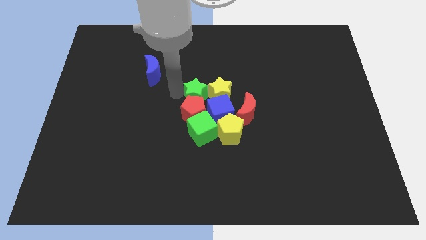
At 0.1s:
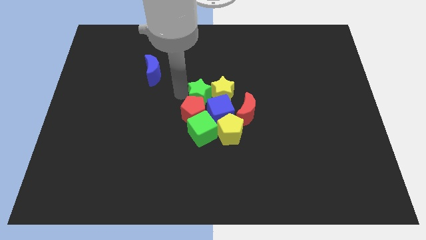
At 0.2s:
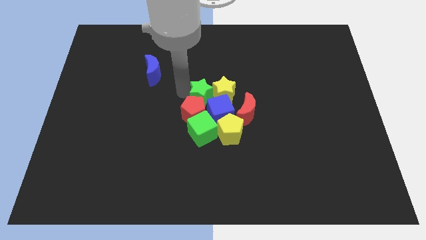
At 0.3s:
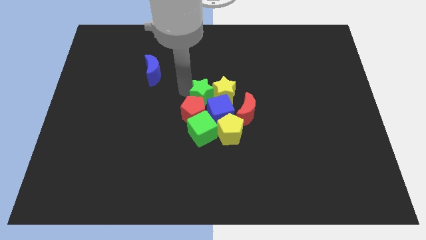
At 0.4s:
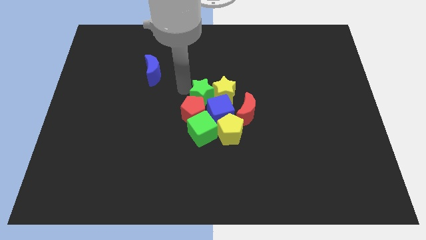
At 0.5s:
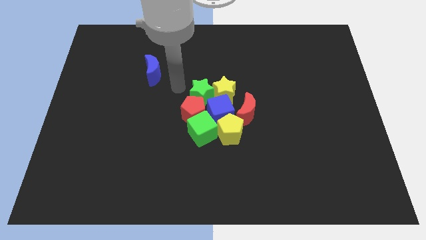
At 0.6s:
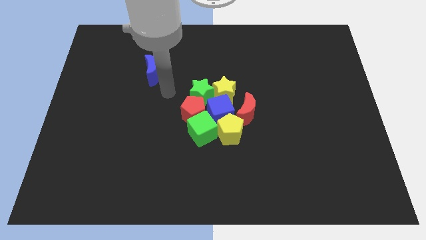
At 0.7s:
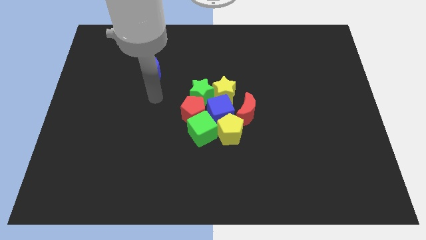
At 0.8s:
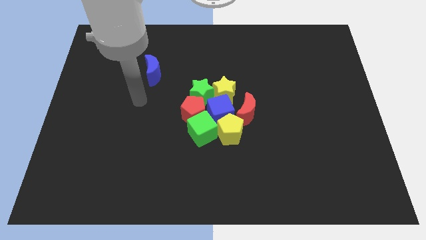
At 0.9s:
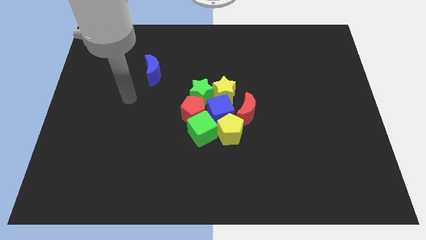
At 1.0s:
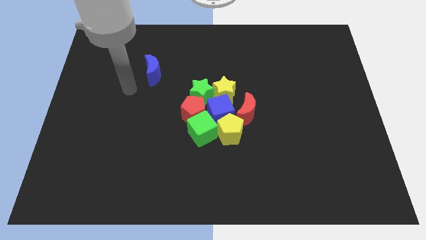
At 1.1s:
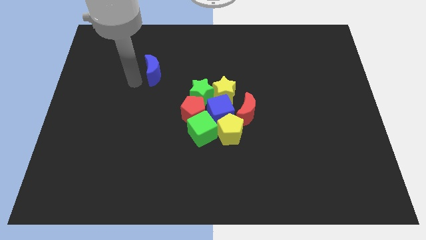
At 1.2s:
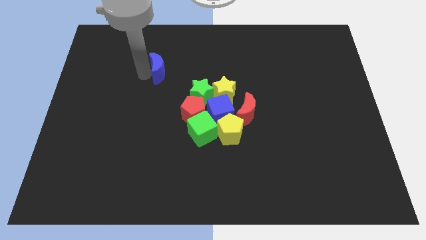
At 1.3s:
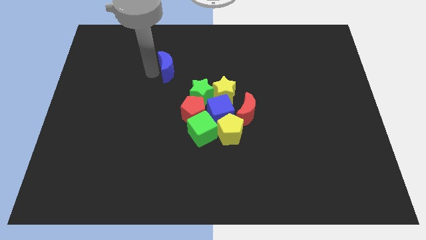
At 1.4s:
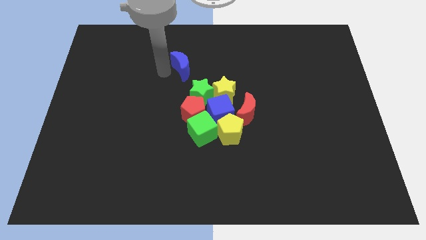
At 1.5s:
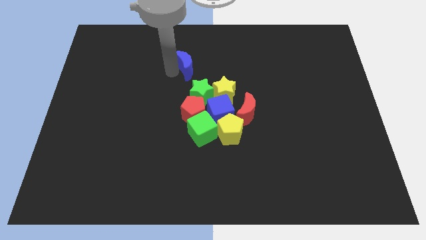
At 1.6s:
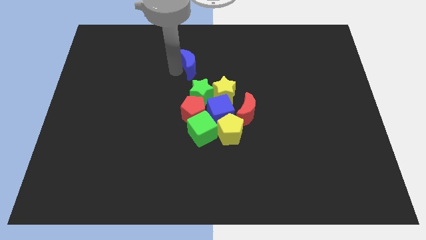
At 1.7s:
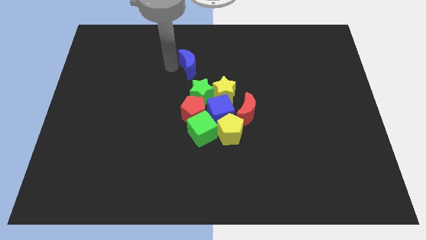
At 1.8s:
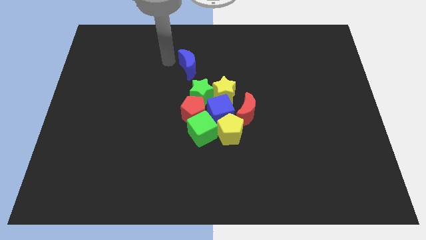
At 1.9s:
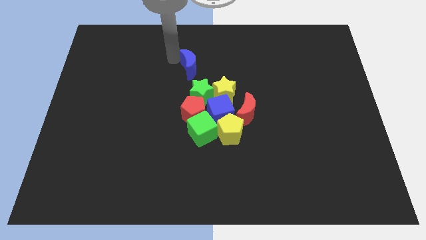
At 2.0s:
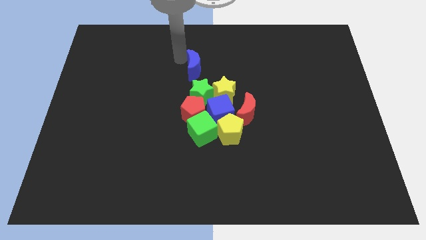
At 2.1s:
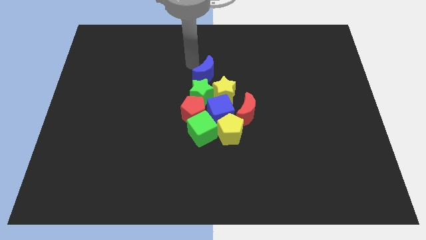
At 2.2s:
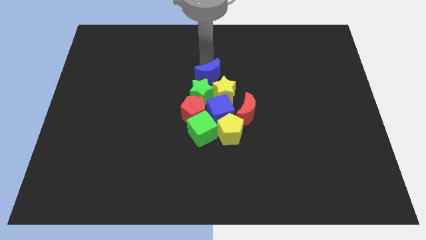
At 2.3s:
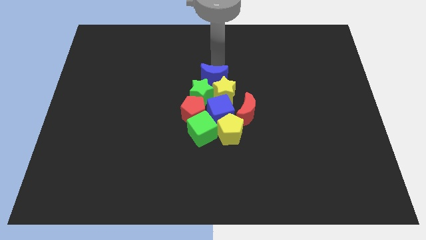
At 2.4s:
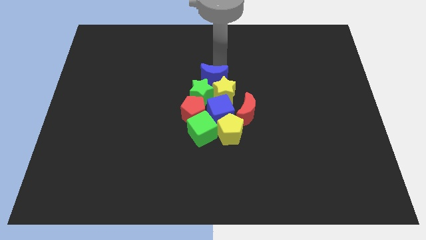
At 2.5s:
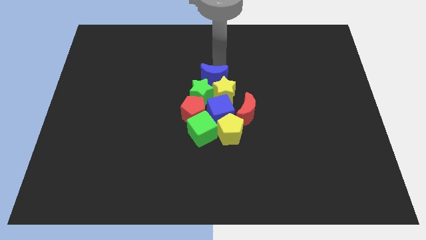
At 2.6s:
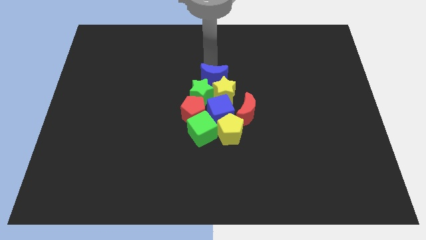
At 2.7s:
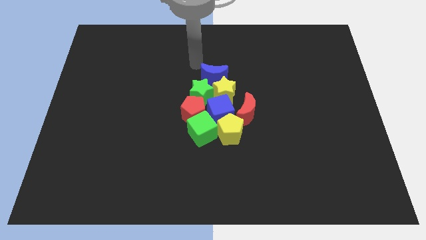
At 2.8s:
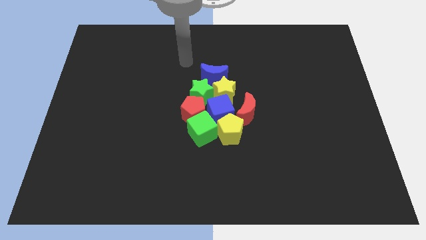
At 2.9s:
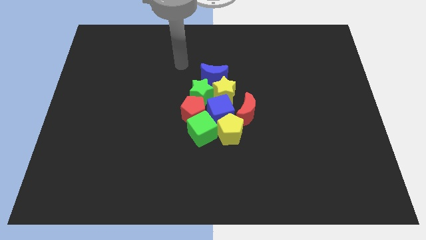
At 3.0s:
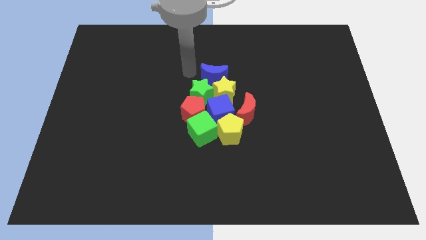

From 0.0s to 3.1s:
place the blue moon to the top of the green star and yellow star

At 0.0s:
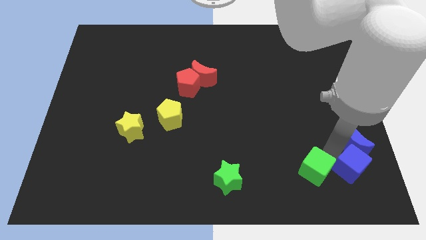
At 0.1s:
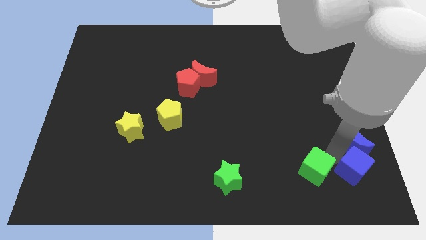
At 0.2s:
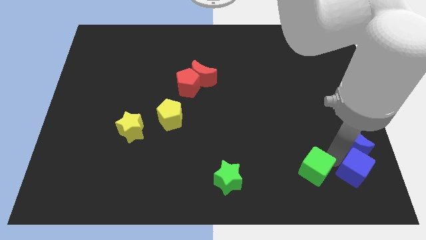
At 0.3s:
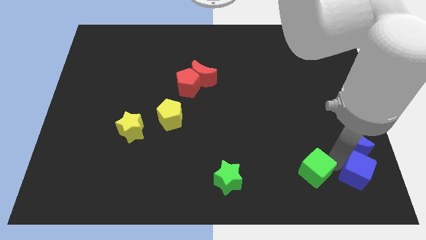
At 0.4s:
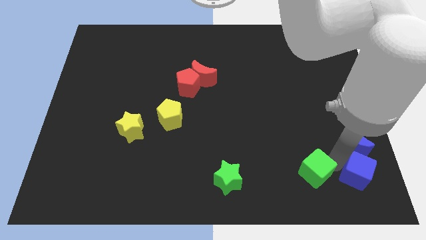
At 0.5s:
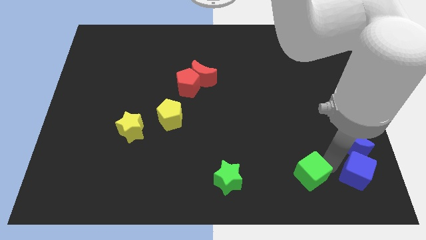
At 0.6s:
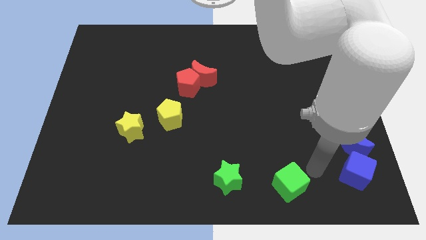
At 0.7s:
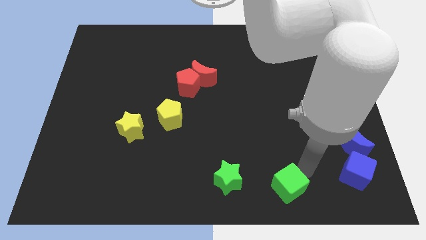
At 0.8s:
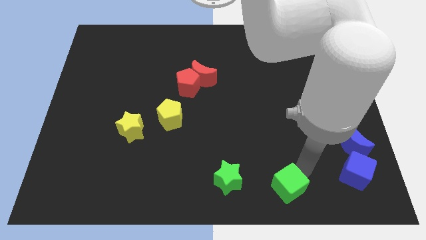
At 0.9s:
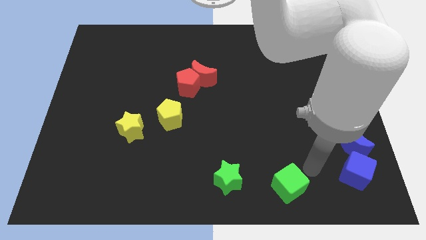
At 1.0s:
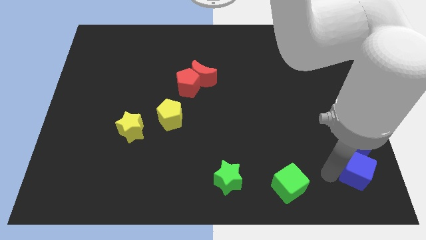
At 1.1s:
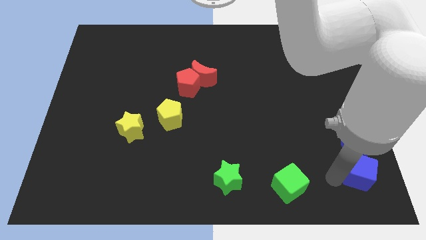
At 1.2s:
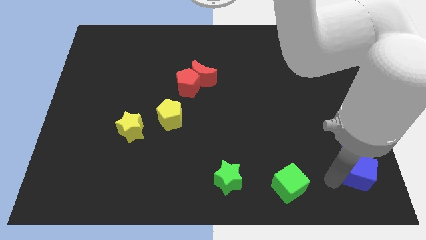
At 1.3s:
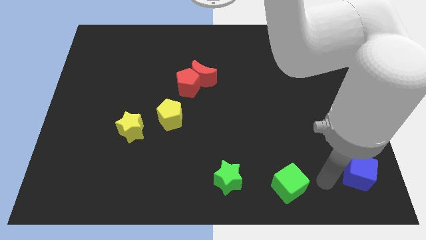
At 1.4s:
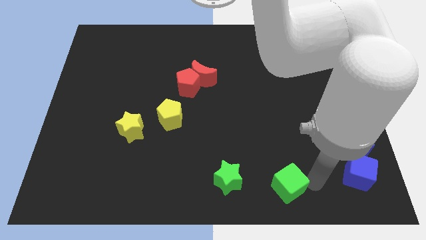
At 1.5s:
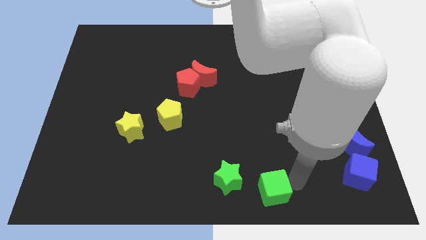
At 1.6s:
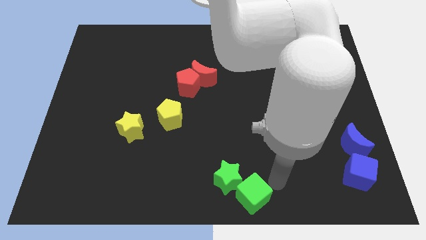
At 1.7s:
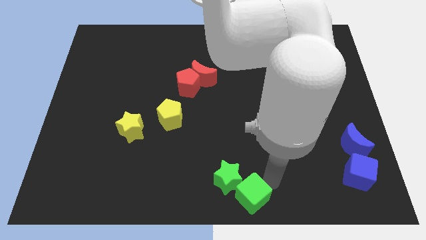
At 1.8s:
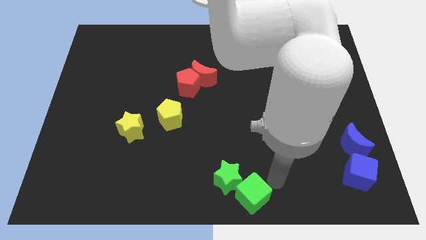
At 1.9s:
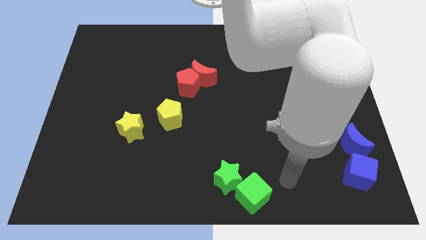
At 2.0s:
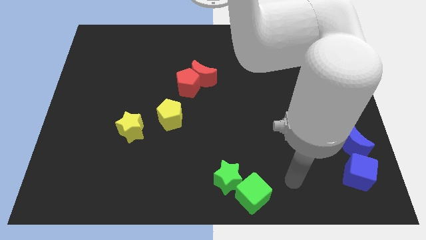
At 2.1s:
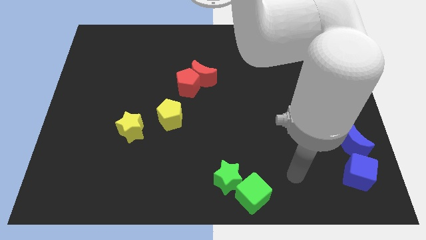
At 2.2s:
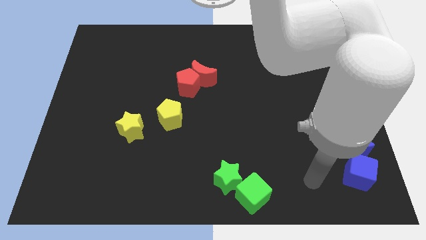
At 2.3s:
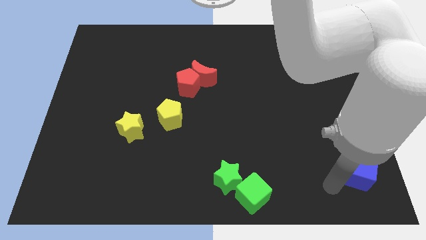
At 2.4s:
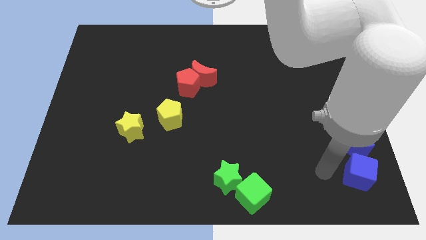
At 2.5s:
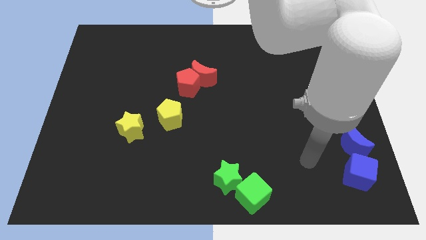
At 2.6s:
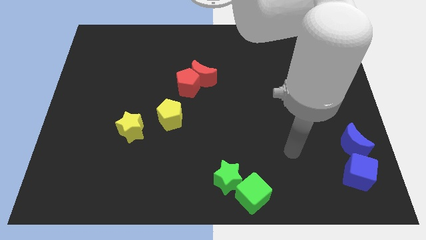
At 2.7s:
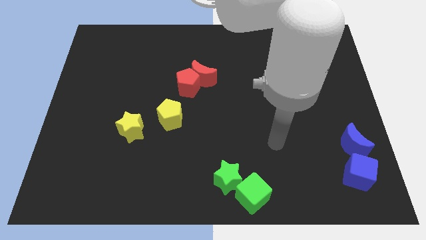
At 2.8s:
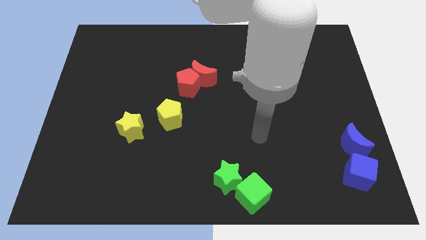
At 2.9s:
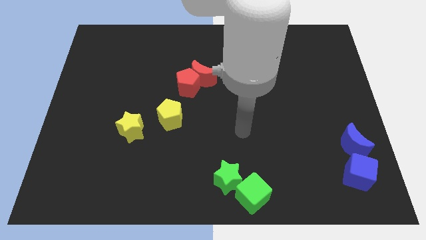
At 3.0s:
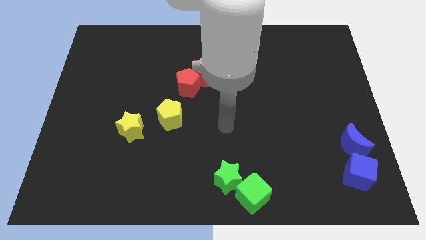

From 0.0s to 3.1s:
push green cube towards bottom center

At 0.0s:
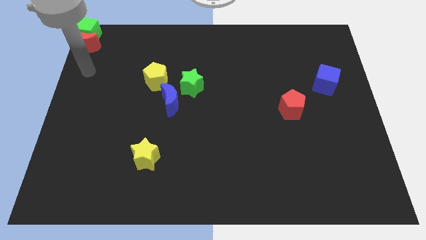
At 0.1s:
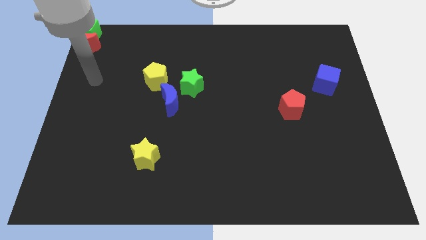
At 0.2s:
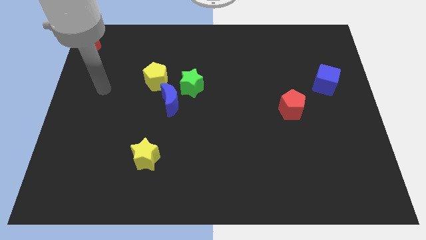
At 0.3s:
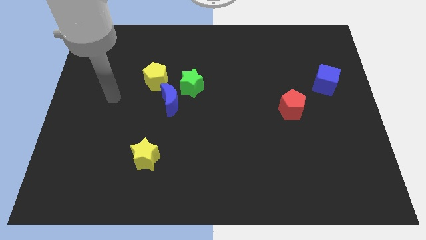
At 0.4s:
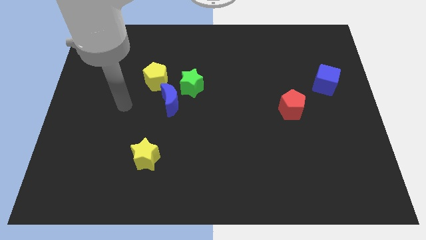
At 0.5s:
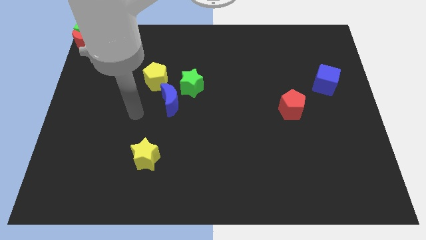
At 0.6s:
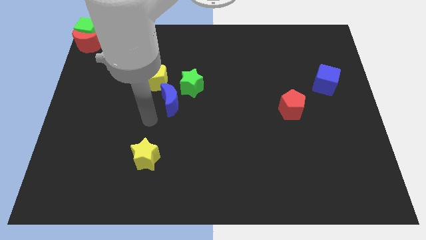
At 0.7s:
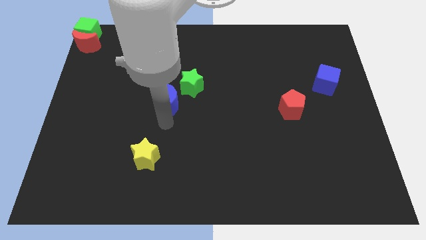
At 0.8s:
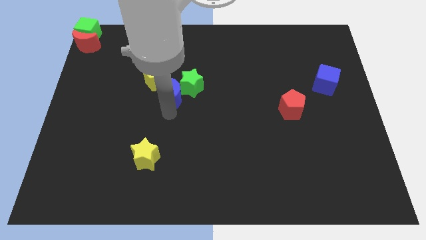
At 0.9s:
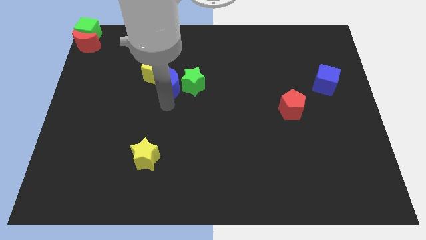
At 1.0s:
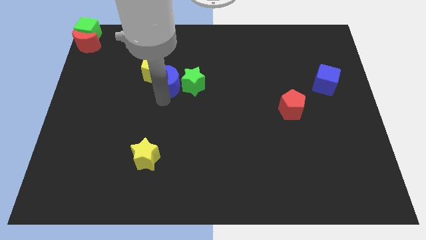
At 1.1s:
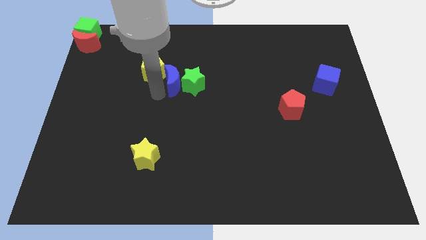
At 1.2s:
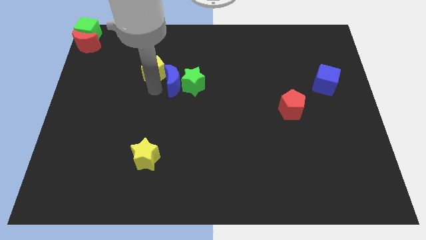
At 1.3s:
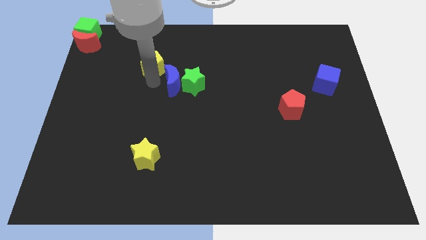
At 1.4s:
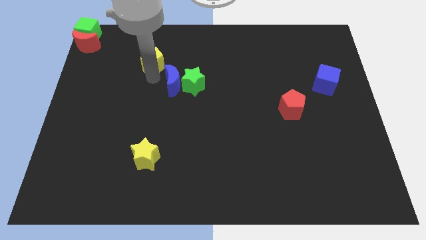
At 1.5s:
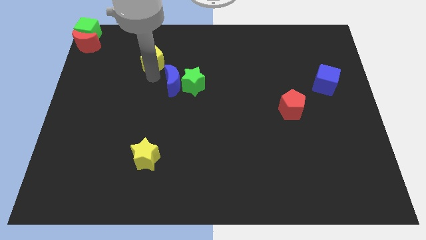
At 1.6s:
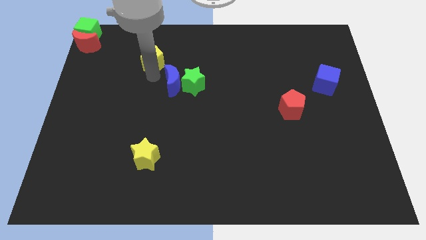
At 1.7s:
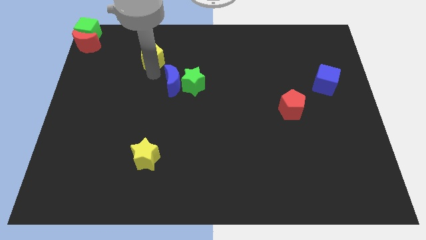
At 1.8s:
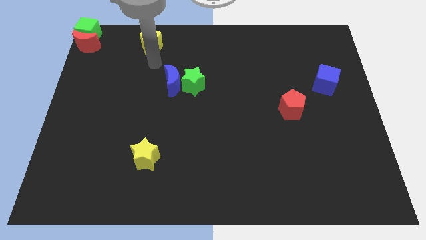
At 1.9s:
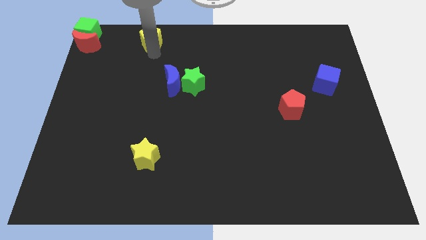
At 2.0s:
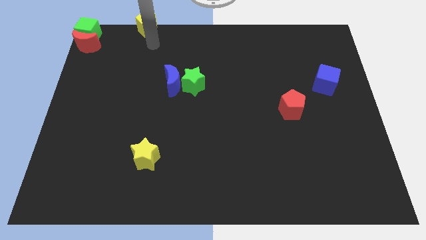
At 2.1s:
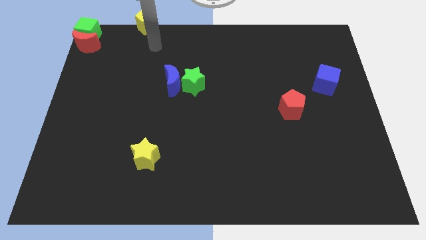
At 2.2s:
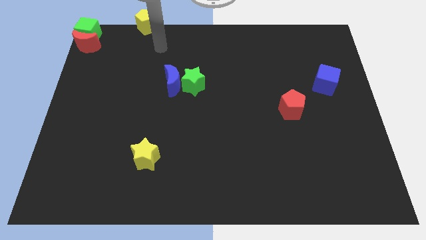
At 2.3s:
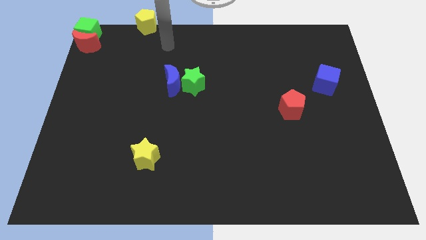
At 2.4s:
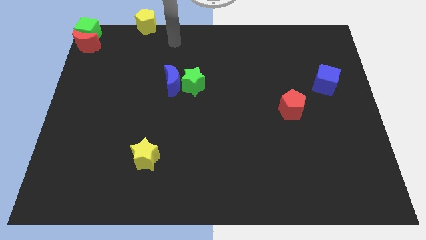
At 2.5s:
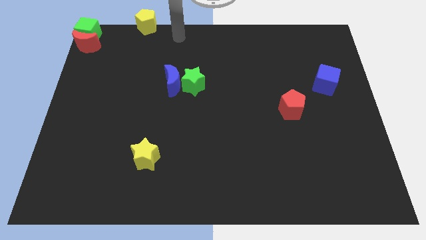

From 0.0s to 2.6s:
push yellow pentagon towards top beside green cube
